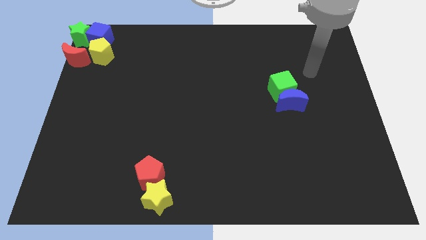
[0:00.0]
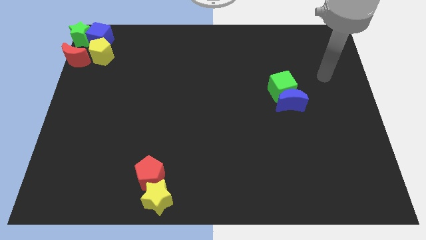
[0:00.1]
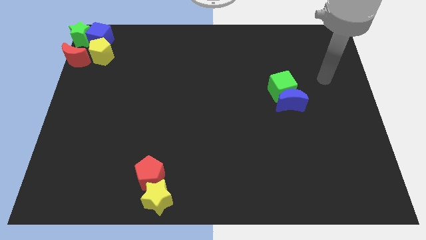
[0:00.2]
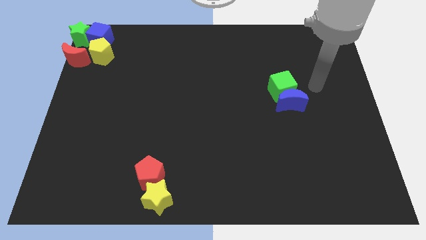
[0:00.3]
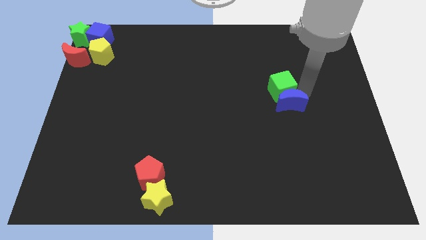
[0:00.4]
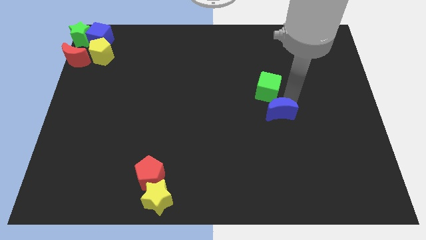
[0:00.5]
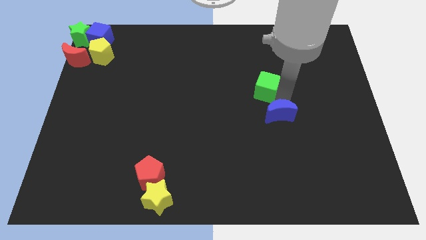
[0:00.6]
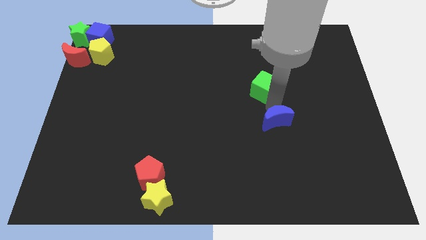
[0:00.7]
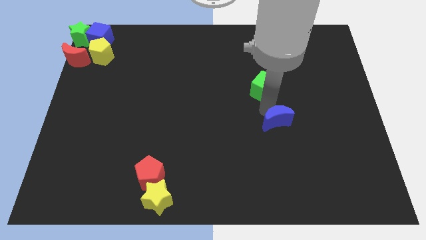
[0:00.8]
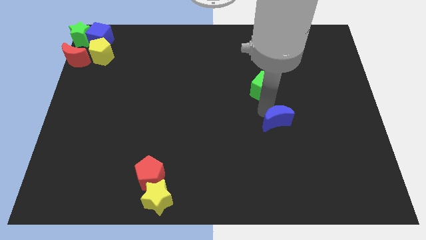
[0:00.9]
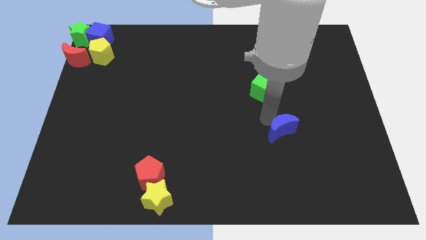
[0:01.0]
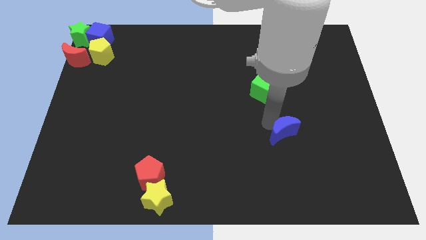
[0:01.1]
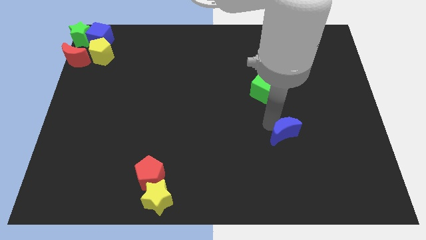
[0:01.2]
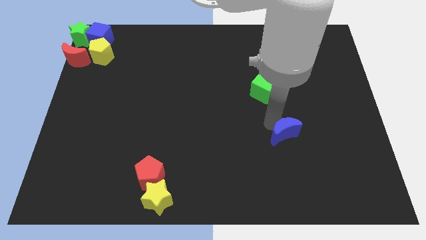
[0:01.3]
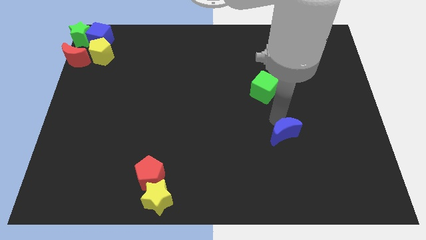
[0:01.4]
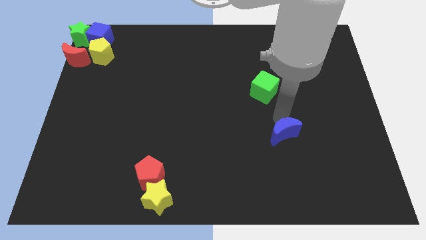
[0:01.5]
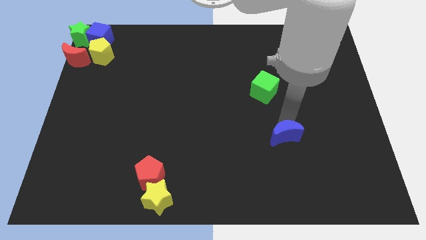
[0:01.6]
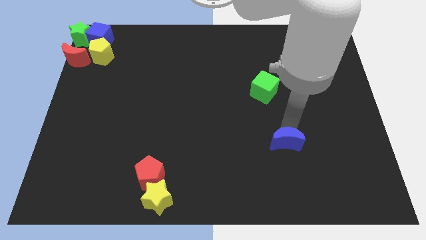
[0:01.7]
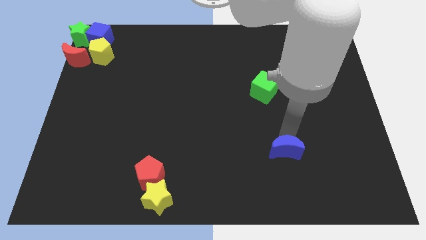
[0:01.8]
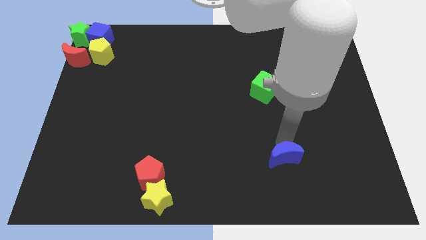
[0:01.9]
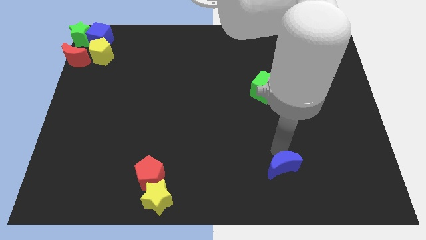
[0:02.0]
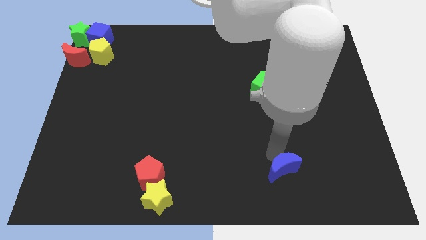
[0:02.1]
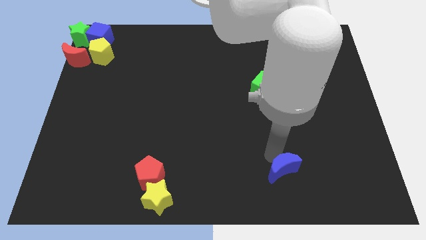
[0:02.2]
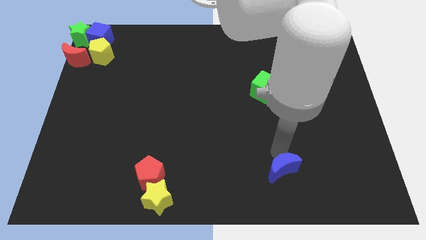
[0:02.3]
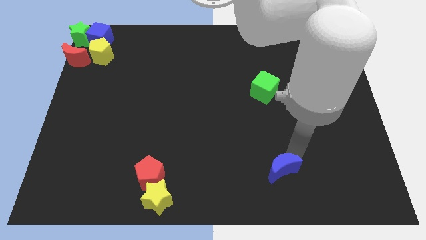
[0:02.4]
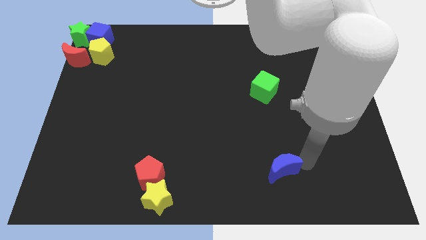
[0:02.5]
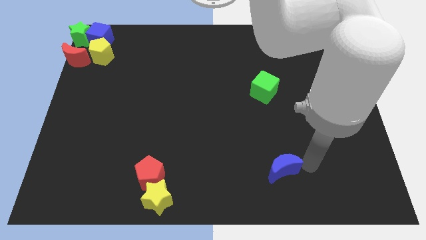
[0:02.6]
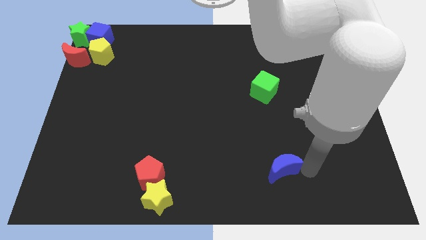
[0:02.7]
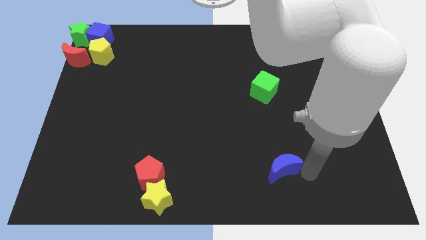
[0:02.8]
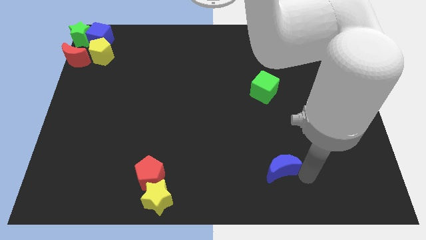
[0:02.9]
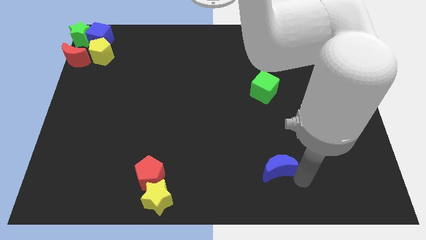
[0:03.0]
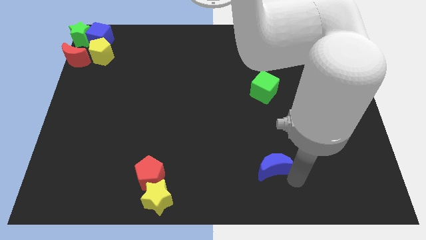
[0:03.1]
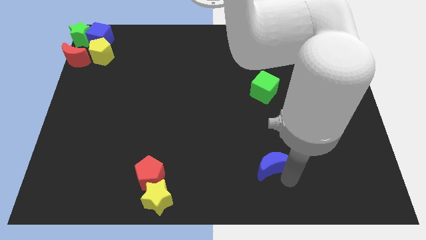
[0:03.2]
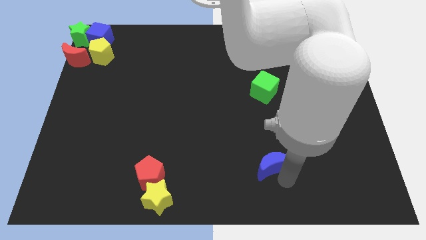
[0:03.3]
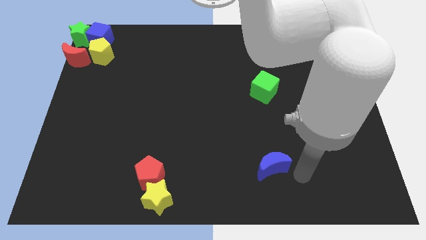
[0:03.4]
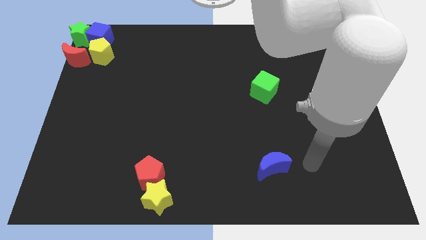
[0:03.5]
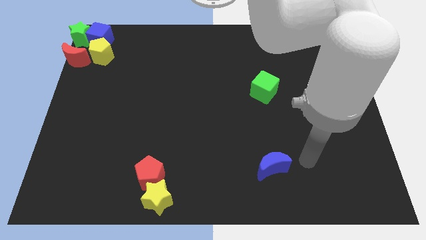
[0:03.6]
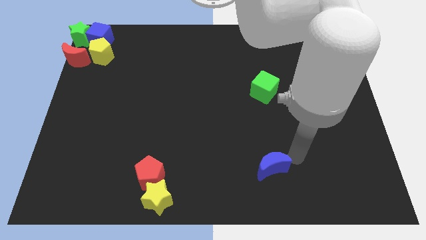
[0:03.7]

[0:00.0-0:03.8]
push the blue crescent towards the bottom

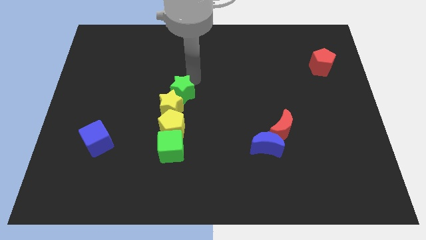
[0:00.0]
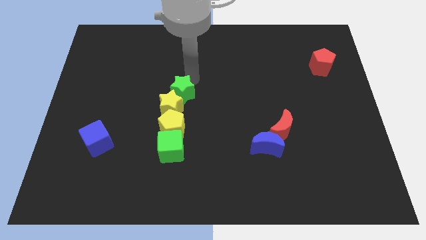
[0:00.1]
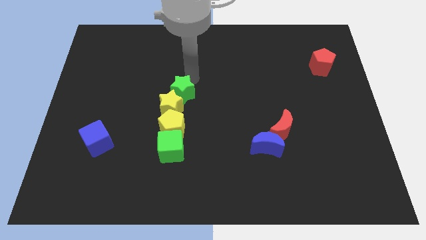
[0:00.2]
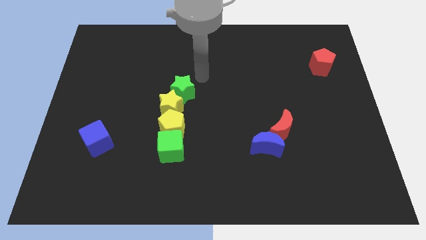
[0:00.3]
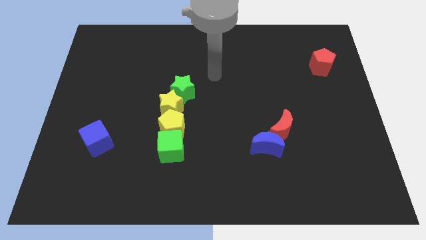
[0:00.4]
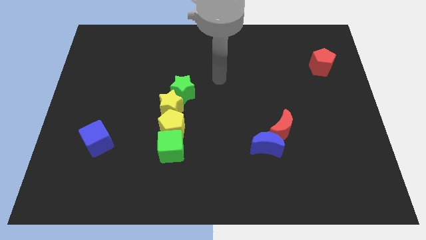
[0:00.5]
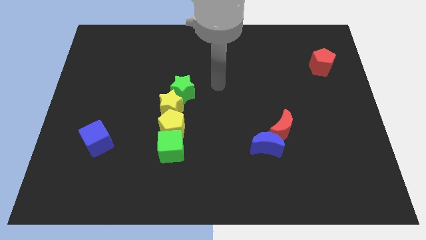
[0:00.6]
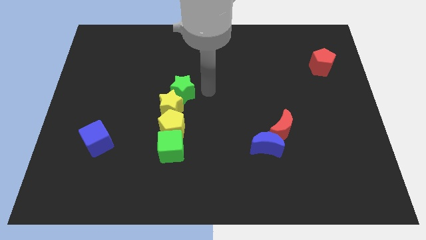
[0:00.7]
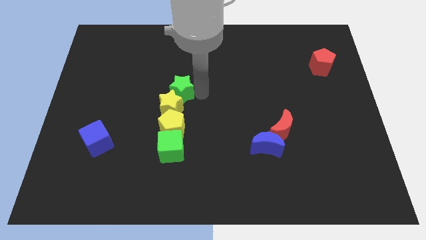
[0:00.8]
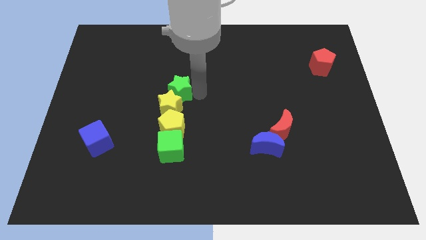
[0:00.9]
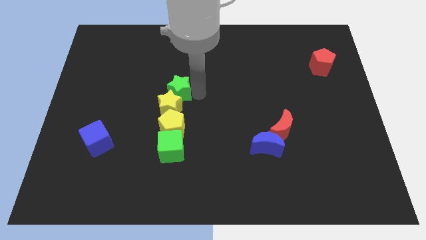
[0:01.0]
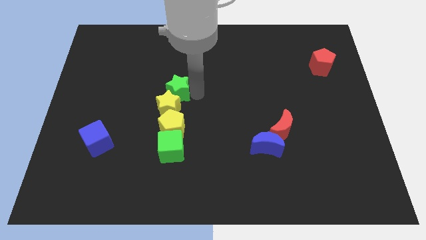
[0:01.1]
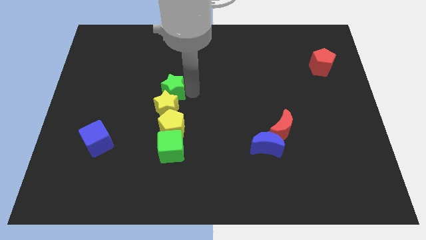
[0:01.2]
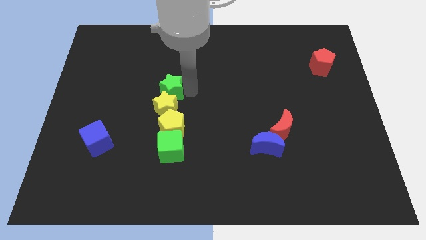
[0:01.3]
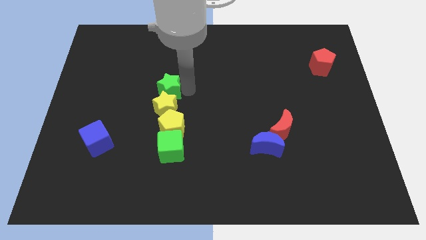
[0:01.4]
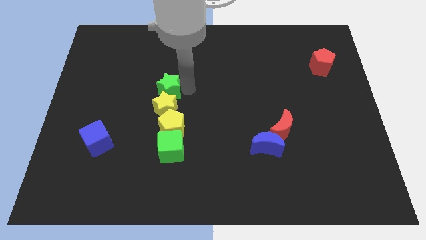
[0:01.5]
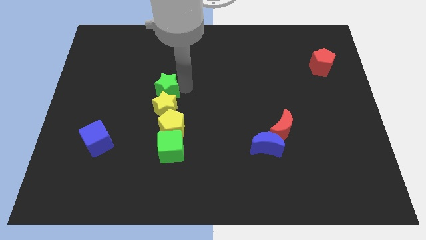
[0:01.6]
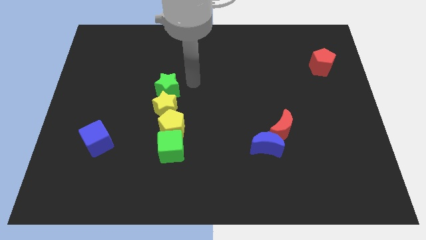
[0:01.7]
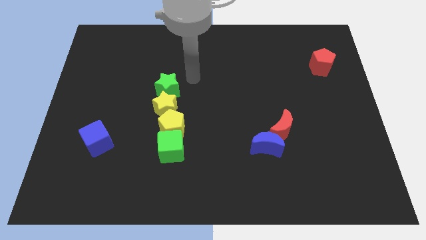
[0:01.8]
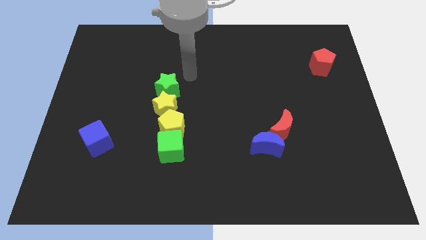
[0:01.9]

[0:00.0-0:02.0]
adjust the green star to the top of the yellow star

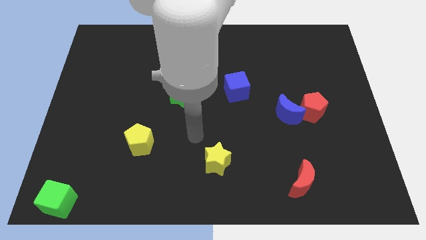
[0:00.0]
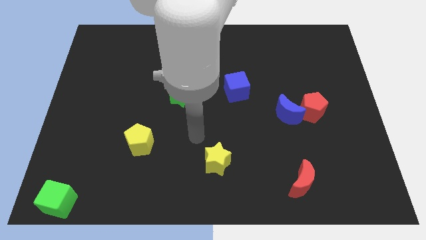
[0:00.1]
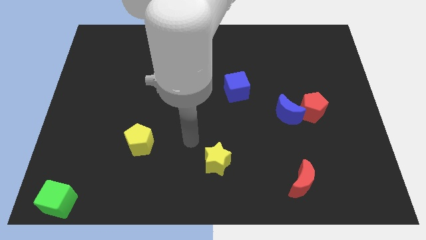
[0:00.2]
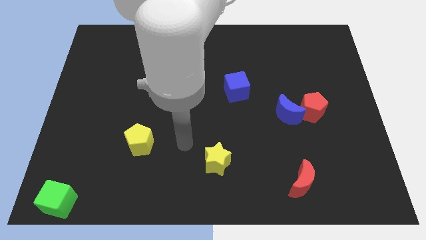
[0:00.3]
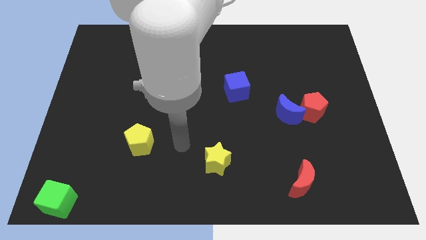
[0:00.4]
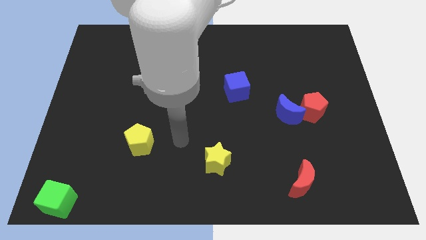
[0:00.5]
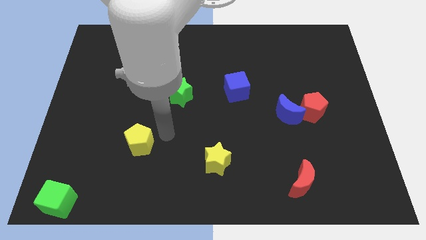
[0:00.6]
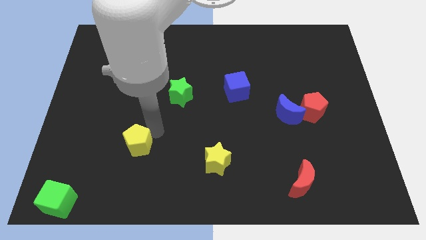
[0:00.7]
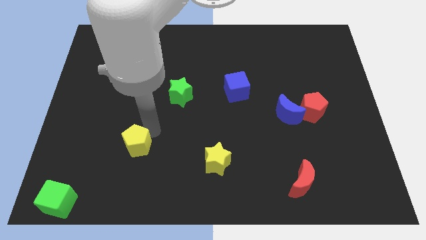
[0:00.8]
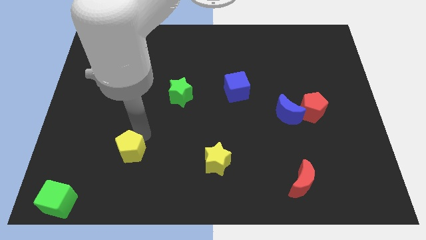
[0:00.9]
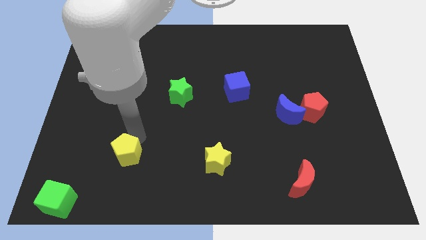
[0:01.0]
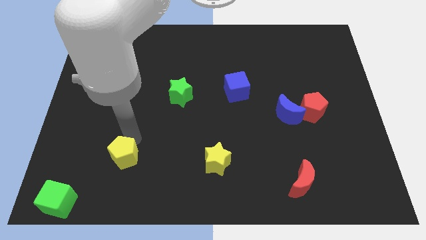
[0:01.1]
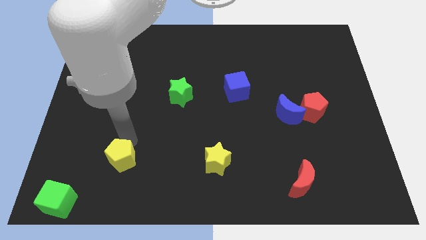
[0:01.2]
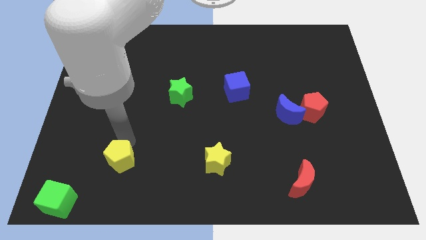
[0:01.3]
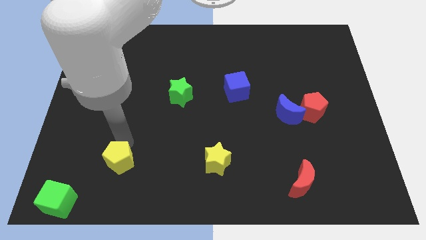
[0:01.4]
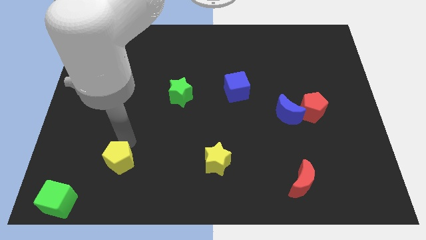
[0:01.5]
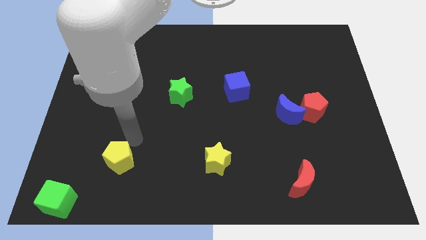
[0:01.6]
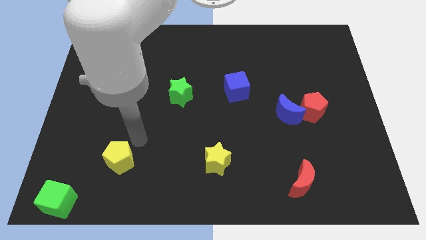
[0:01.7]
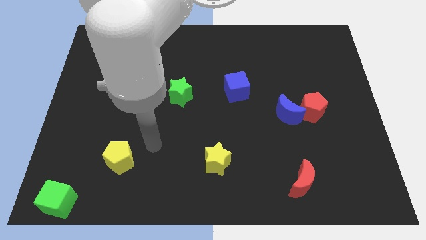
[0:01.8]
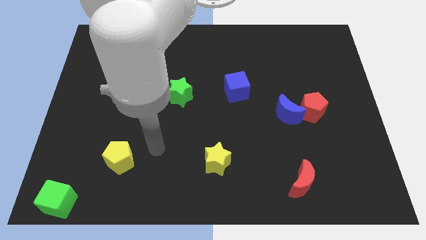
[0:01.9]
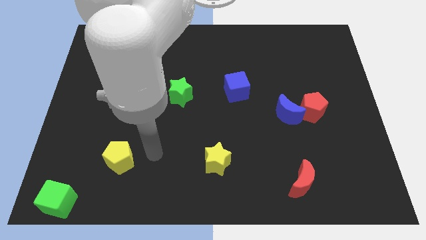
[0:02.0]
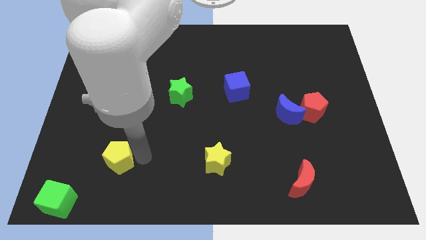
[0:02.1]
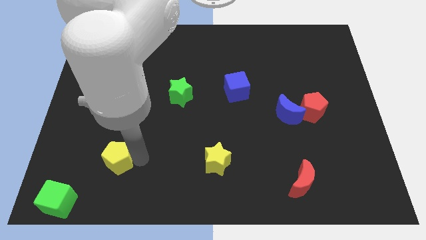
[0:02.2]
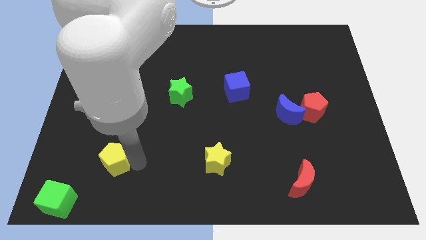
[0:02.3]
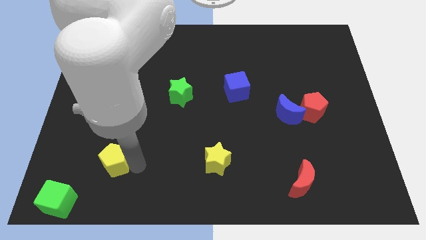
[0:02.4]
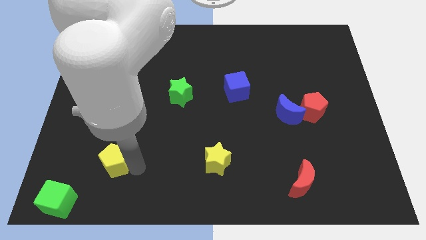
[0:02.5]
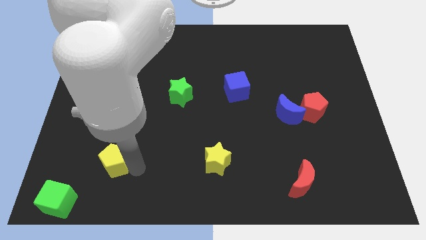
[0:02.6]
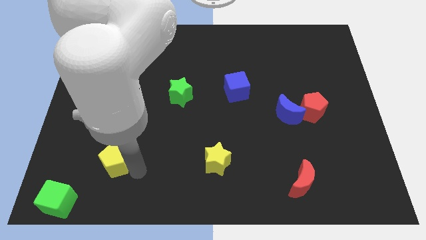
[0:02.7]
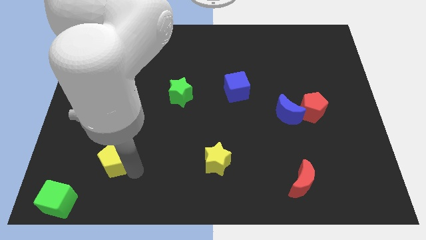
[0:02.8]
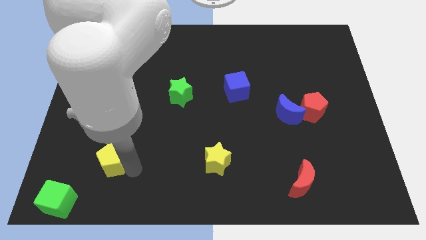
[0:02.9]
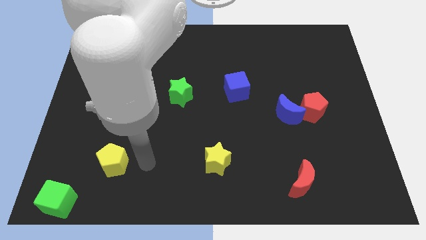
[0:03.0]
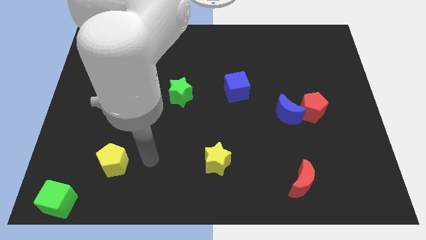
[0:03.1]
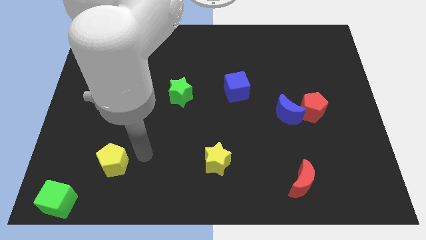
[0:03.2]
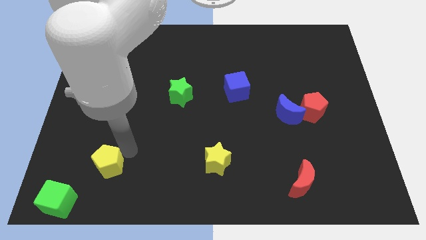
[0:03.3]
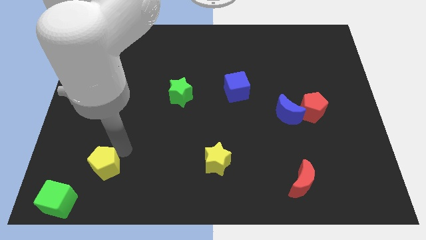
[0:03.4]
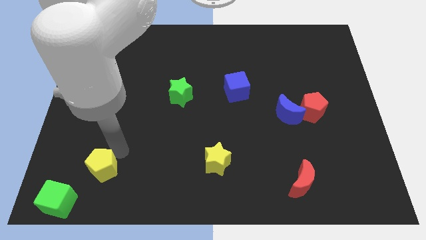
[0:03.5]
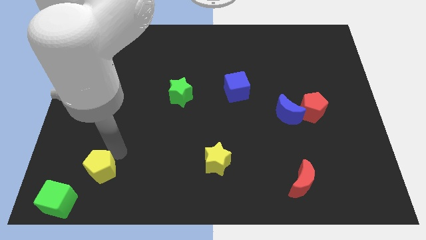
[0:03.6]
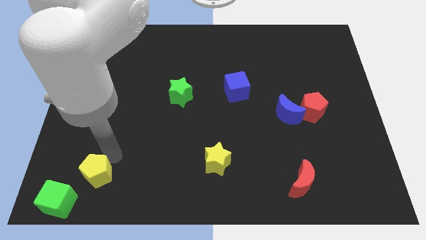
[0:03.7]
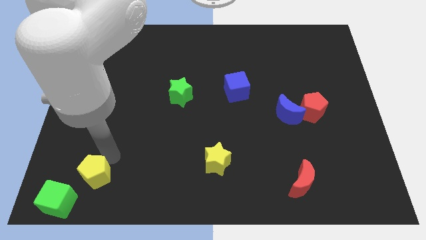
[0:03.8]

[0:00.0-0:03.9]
slide the yellow pentagon diagonally bottom left to the yellow star
